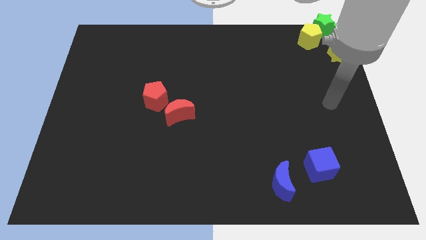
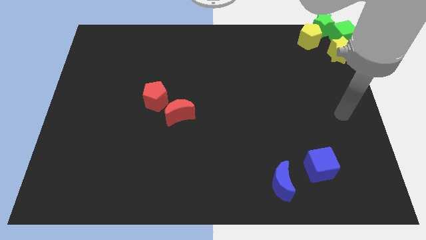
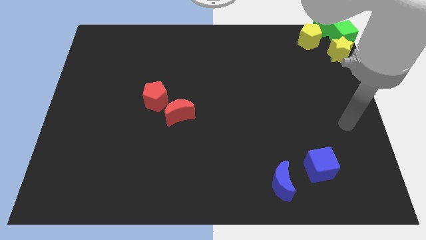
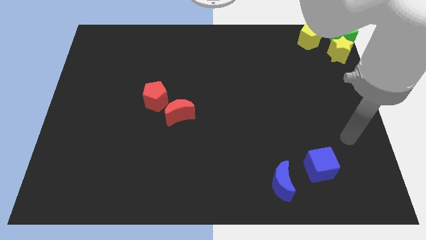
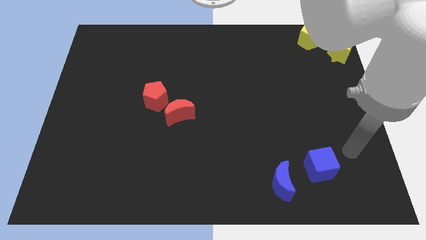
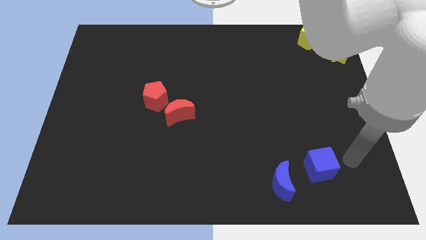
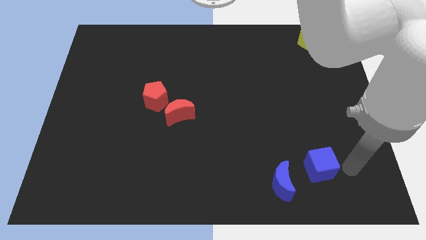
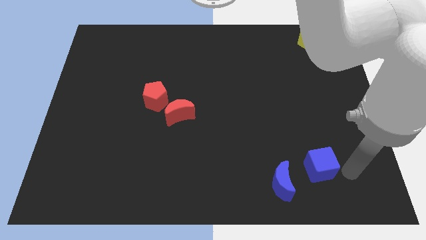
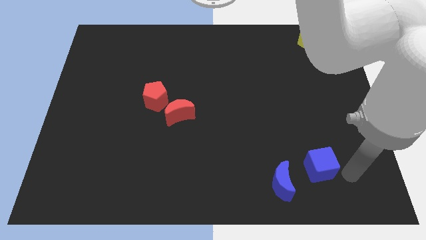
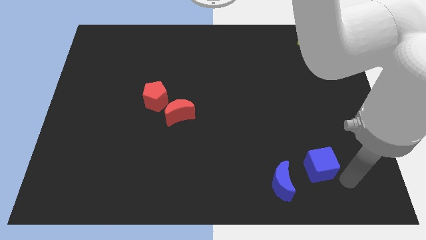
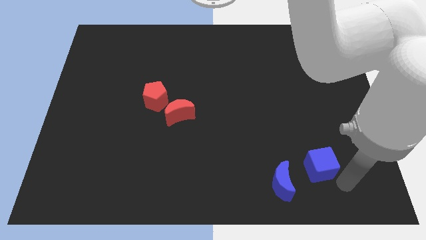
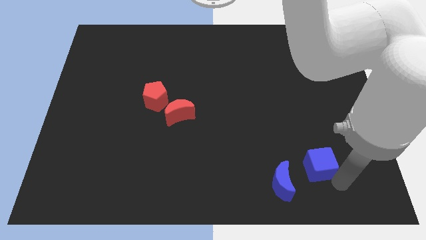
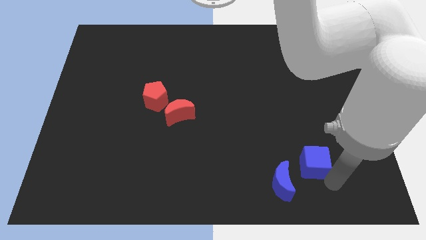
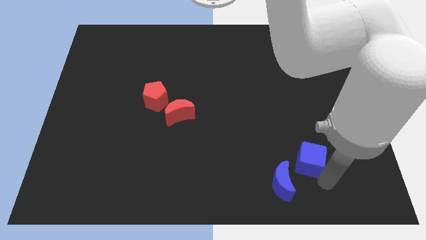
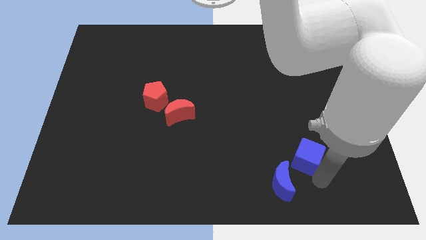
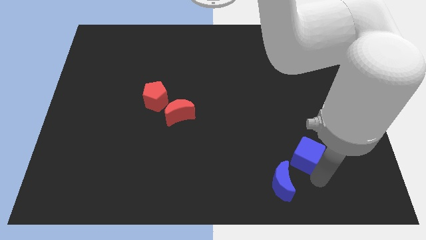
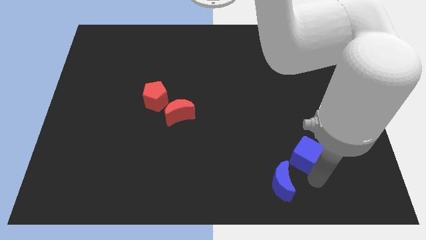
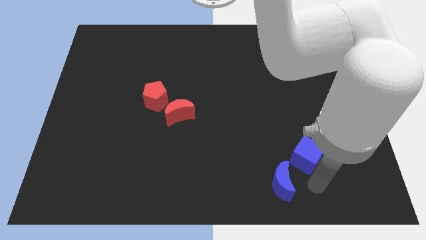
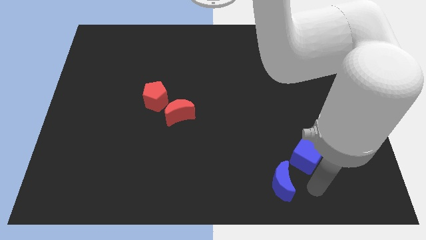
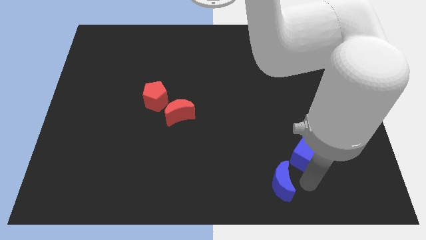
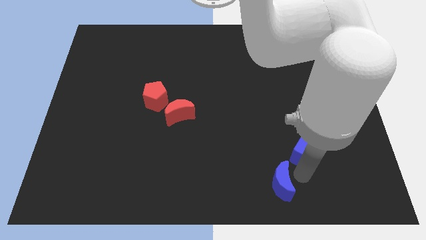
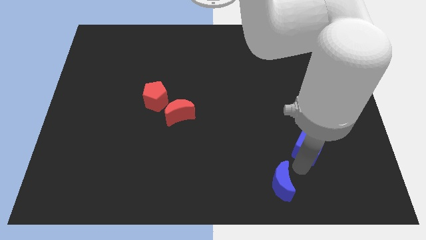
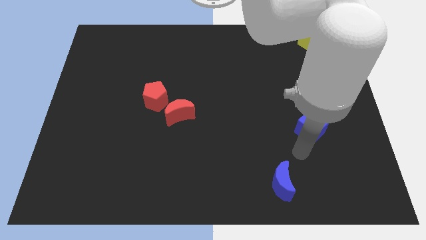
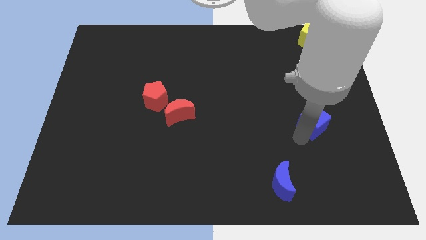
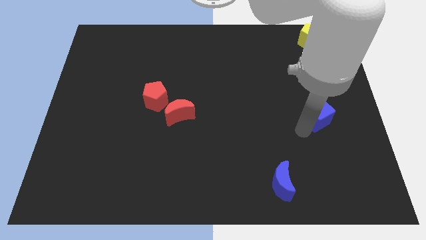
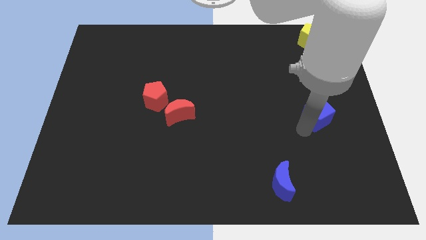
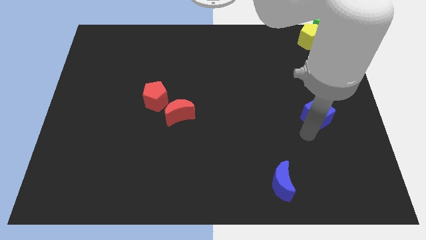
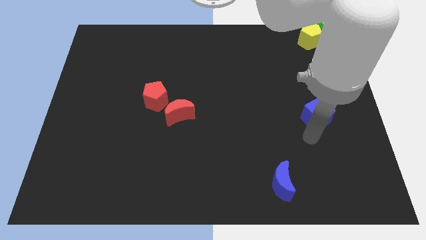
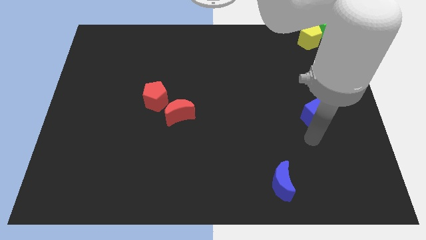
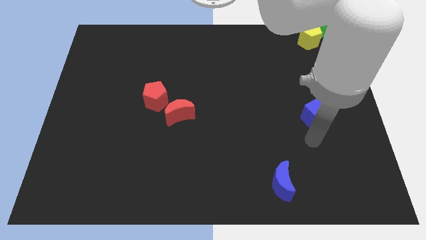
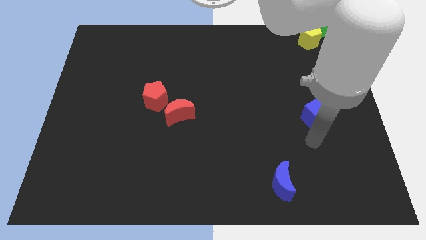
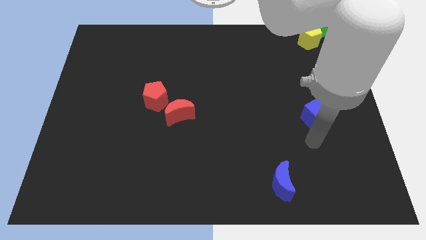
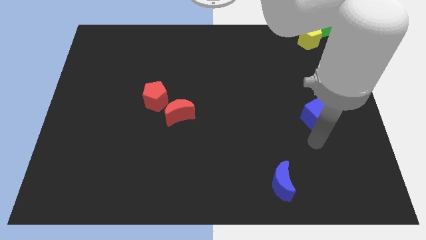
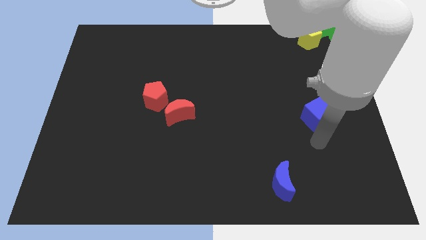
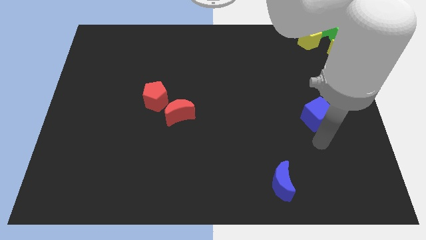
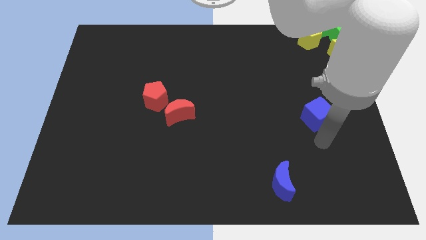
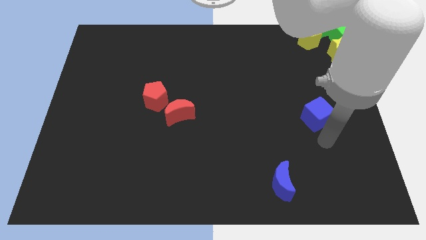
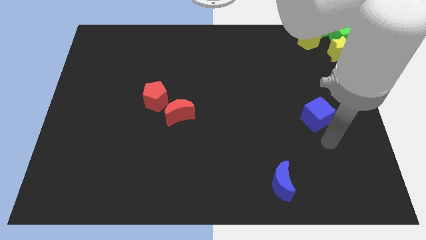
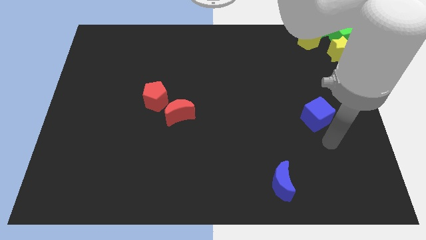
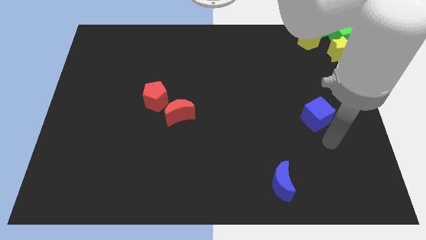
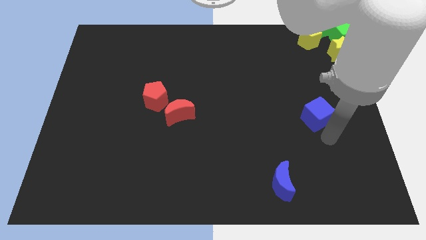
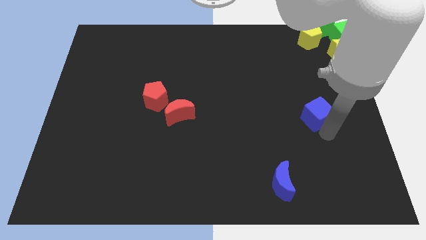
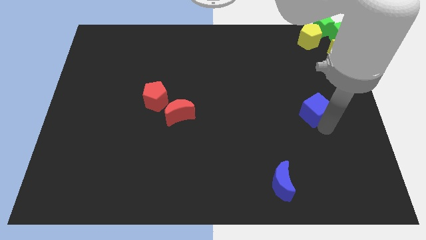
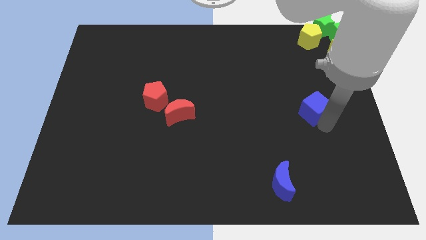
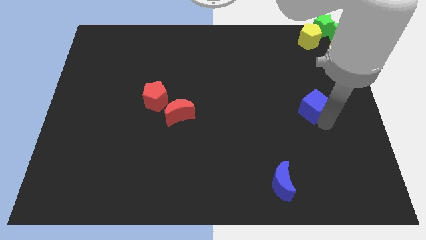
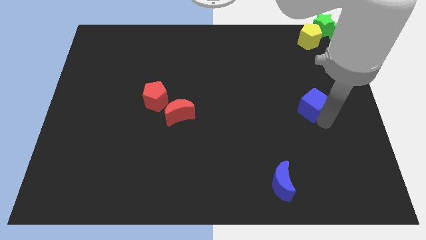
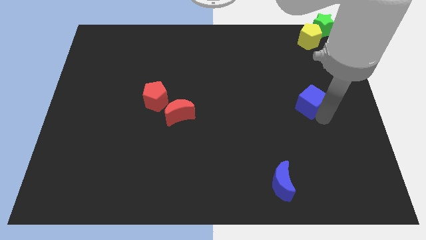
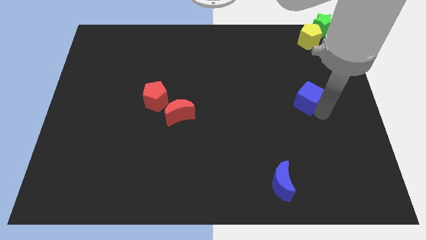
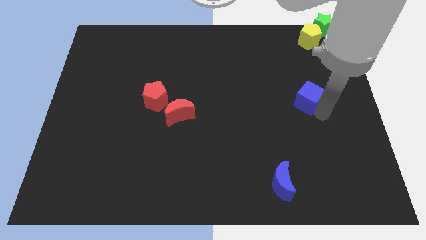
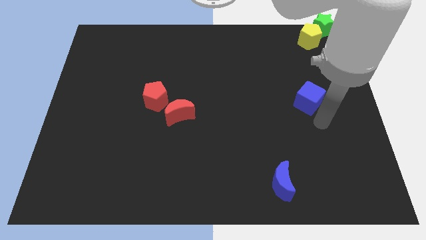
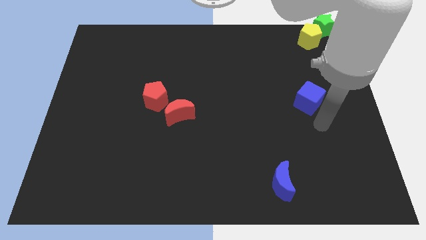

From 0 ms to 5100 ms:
push the blue cube to the center

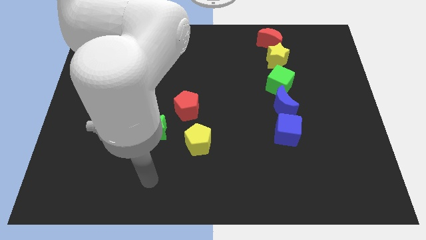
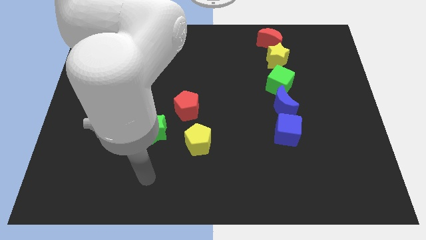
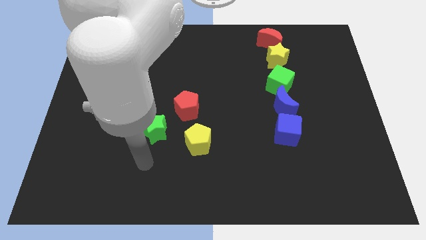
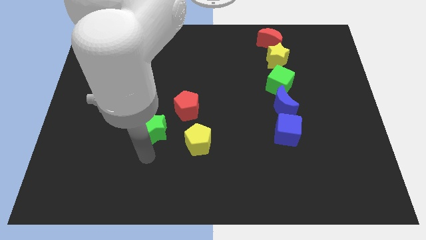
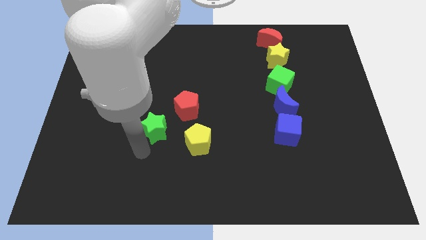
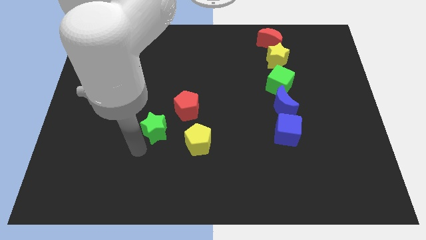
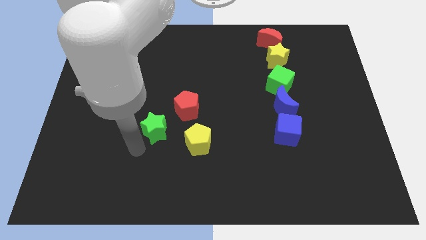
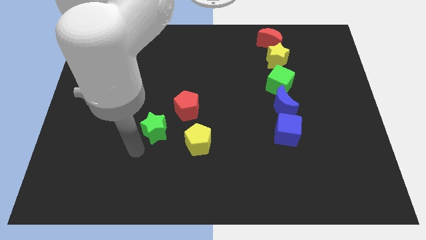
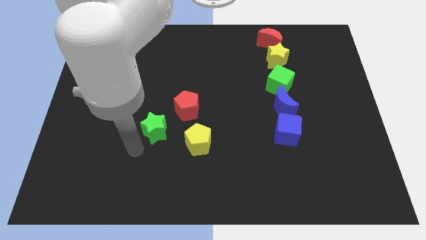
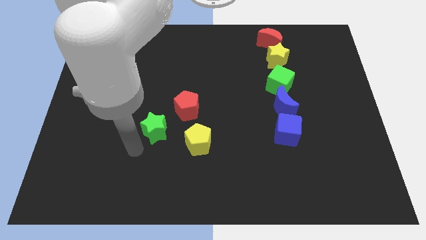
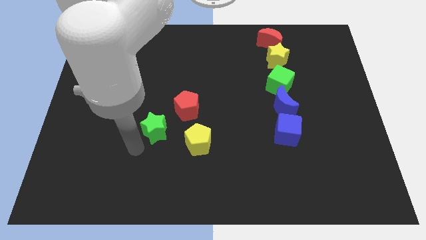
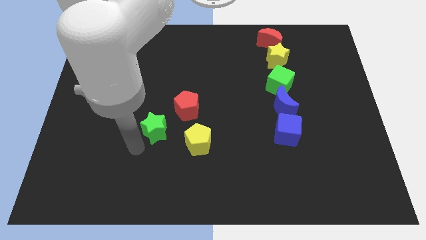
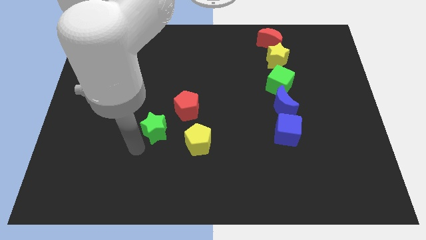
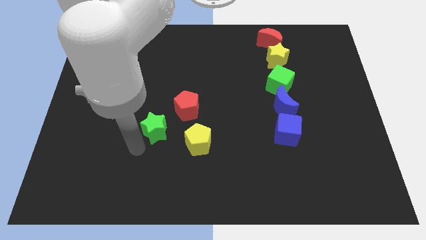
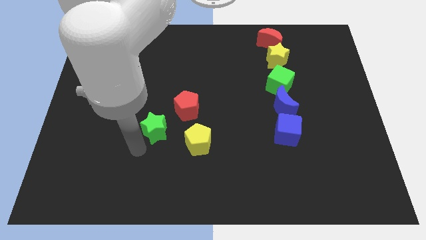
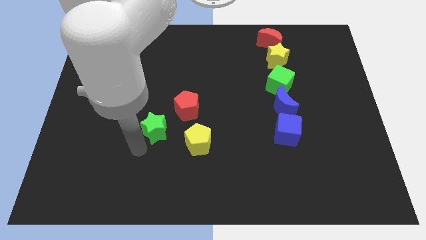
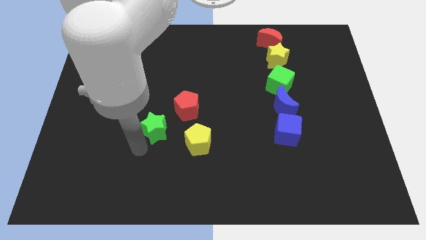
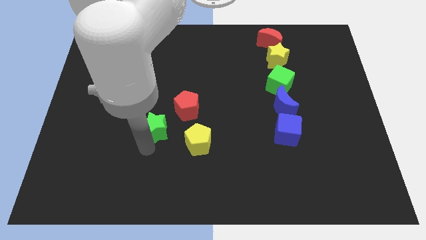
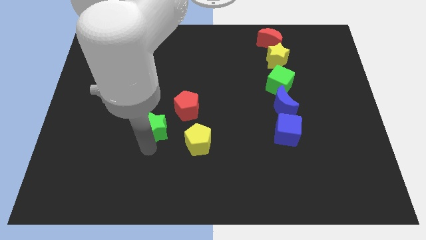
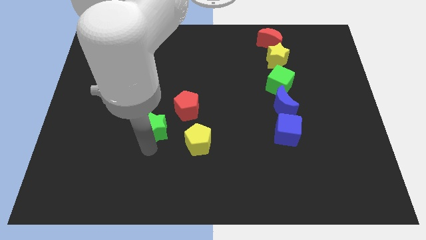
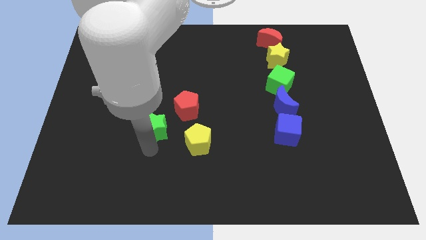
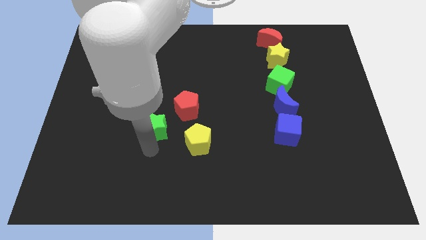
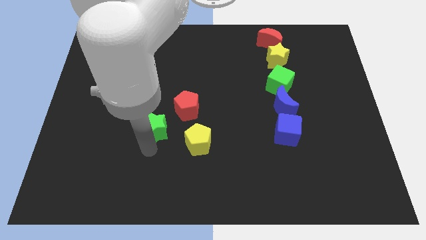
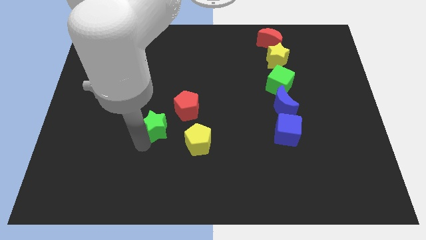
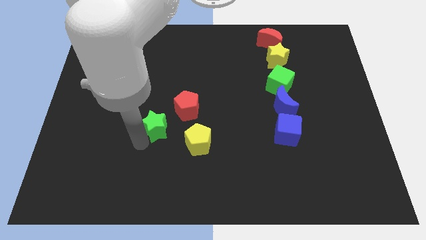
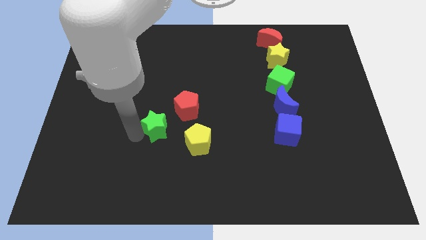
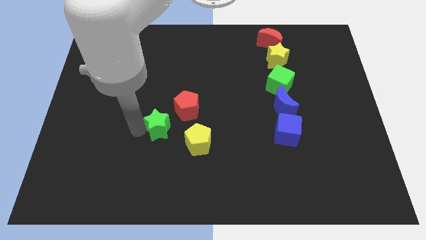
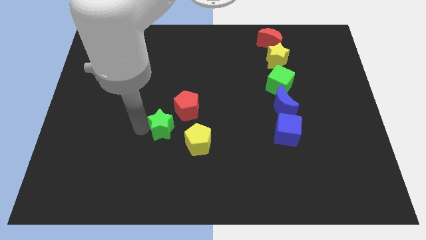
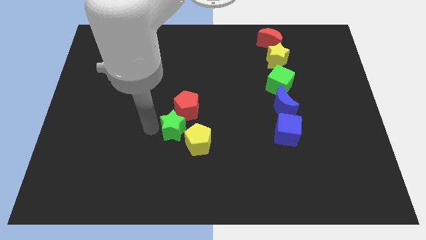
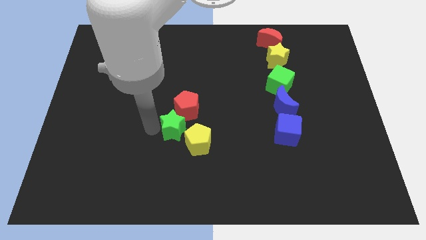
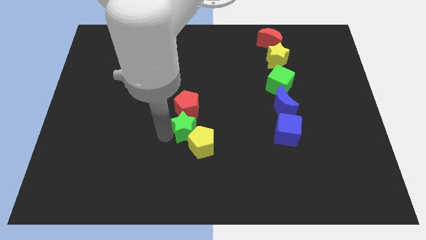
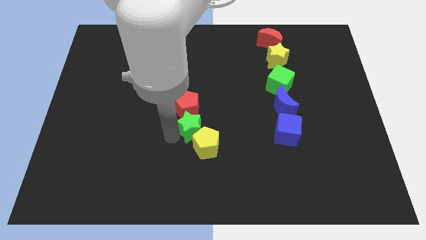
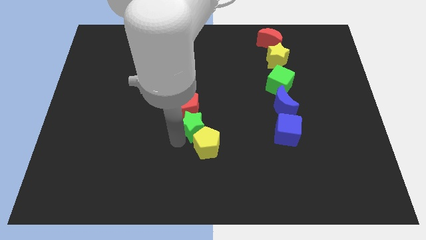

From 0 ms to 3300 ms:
place the green star in between the yellow pentagon and red pentagon

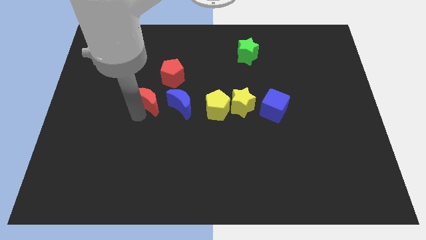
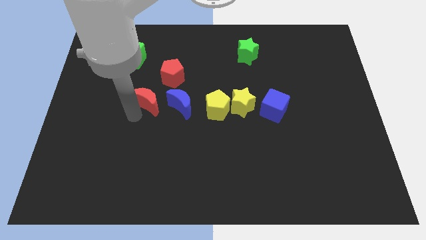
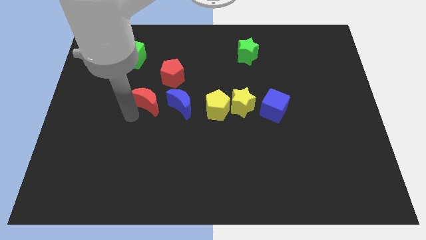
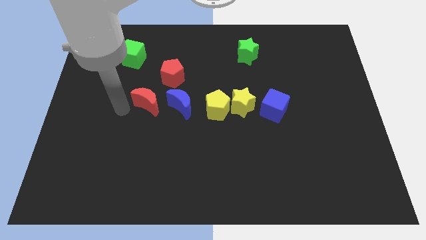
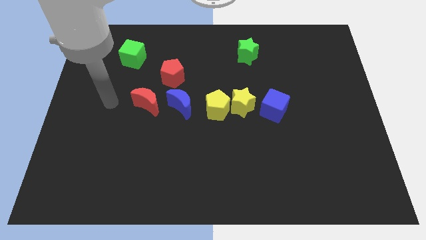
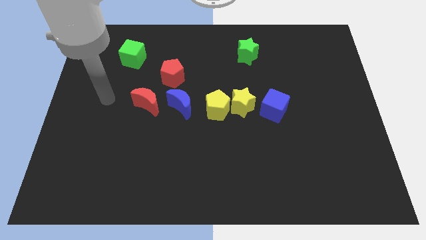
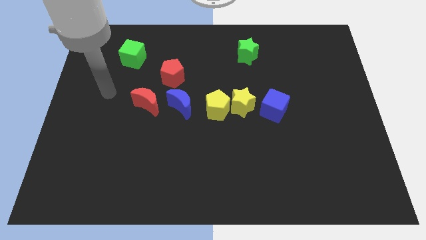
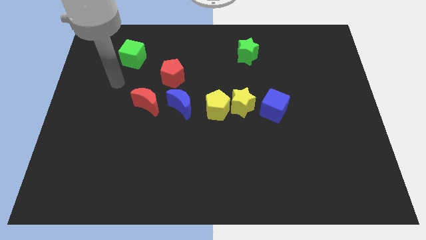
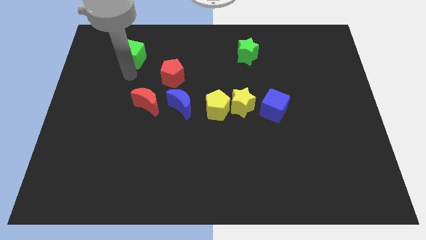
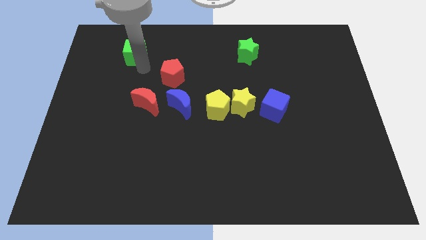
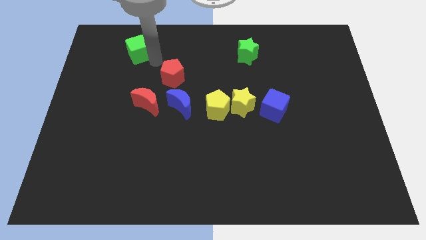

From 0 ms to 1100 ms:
place your arm in between the green cube and red pentagon
